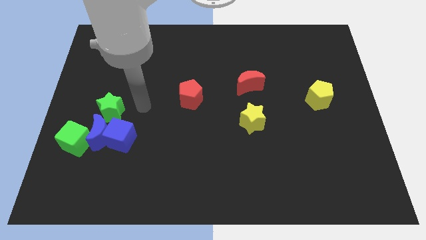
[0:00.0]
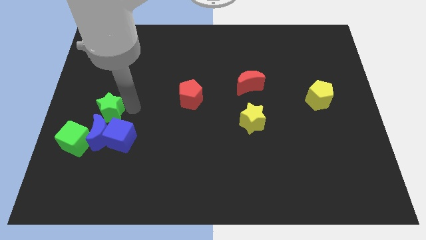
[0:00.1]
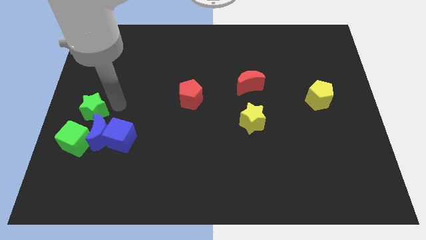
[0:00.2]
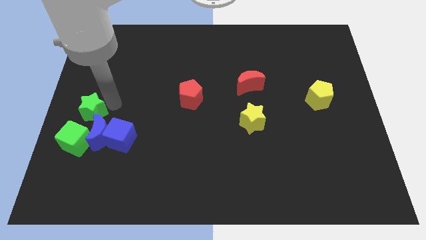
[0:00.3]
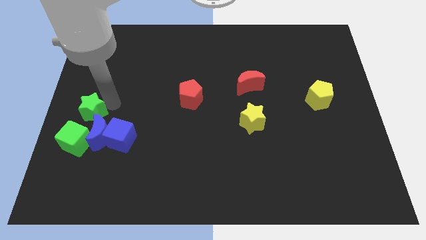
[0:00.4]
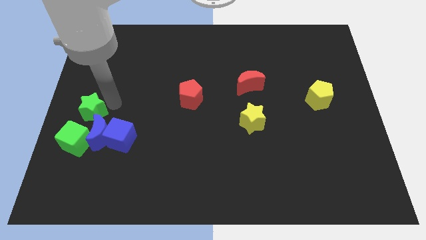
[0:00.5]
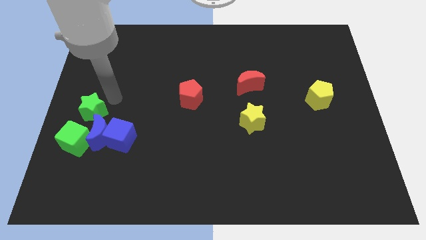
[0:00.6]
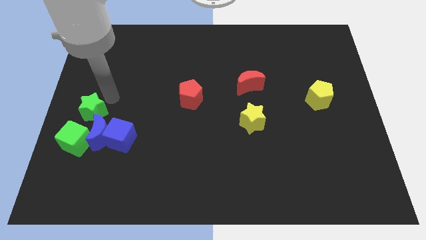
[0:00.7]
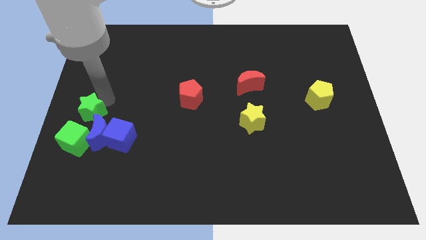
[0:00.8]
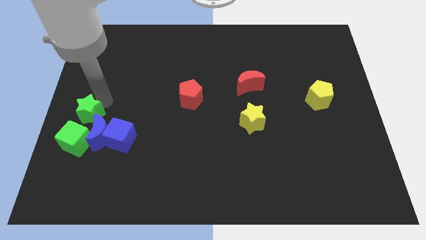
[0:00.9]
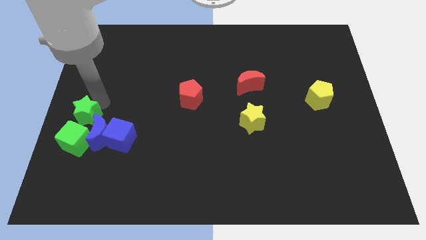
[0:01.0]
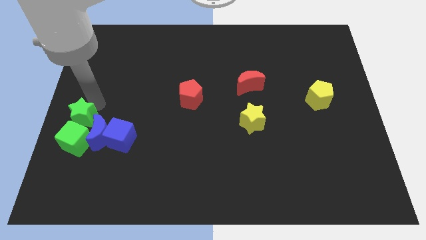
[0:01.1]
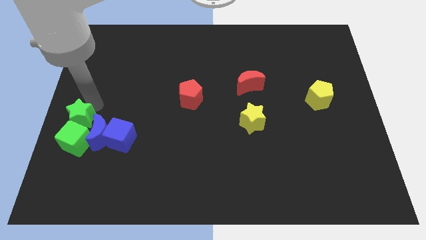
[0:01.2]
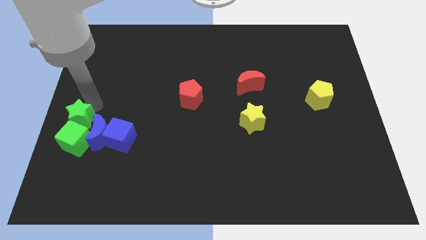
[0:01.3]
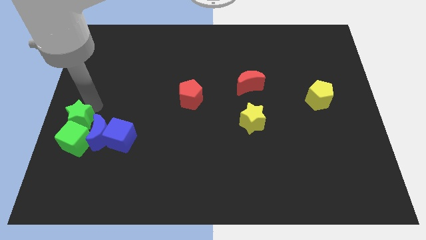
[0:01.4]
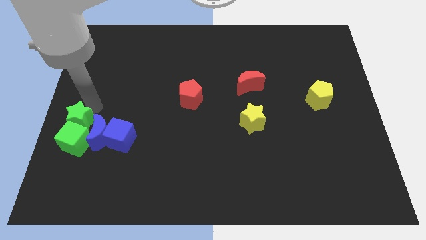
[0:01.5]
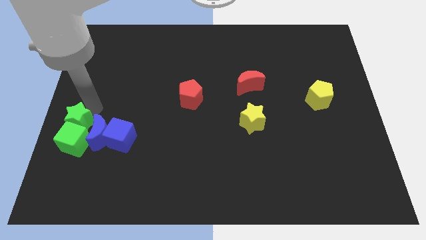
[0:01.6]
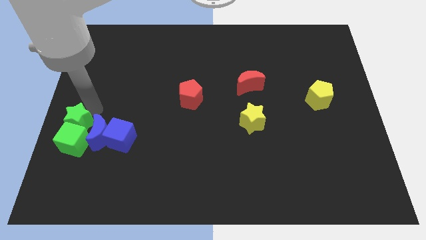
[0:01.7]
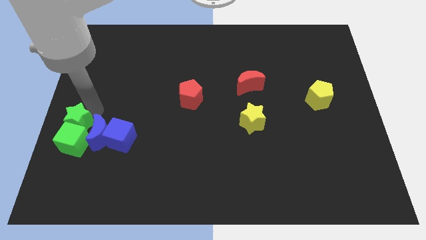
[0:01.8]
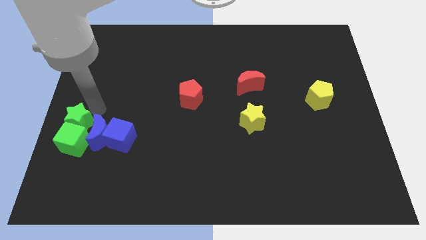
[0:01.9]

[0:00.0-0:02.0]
push the green star to the top of the green cube

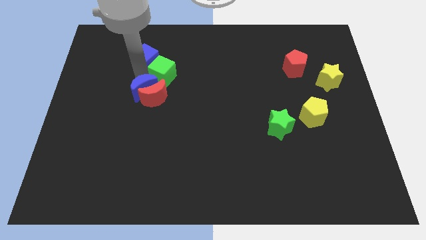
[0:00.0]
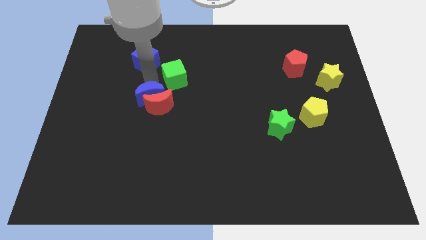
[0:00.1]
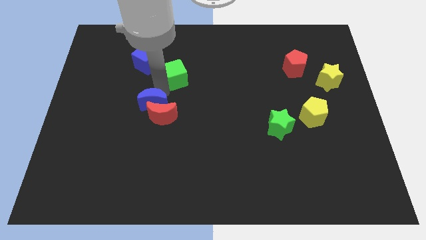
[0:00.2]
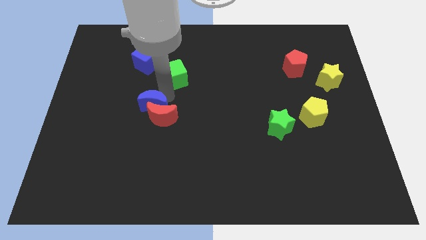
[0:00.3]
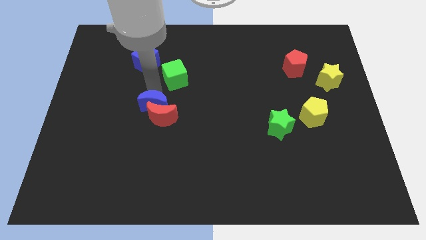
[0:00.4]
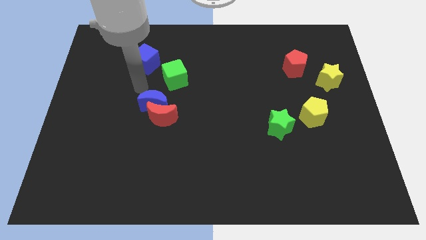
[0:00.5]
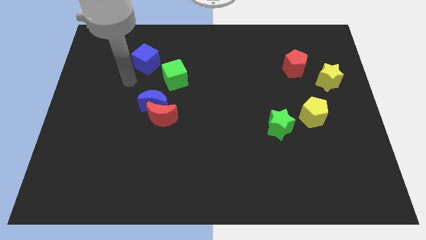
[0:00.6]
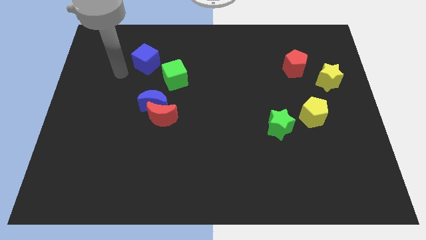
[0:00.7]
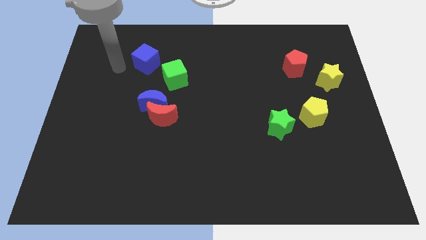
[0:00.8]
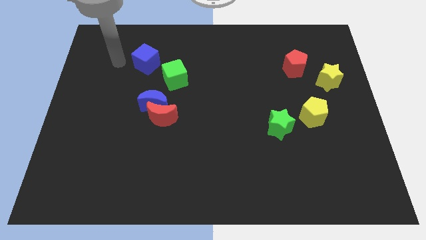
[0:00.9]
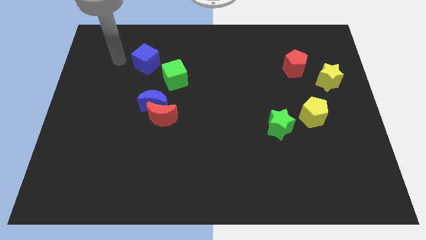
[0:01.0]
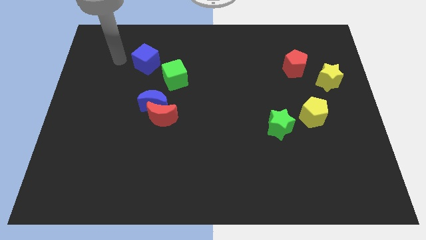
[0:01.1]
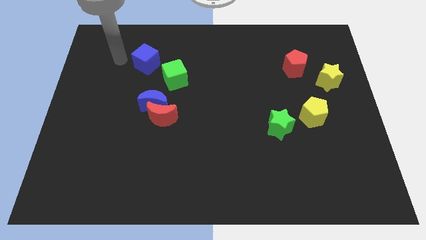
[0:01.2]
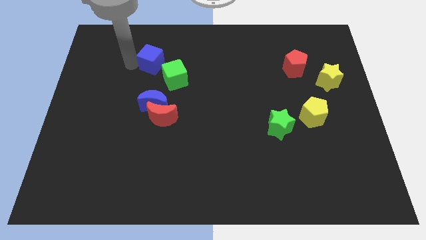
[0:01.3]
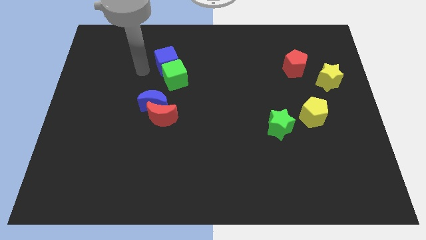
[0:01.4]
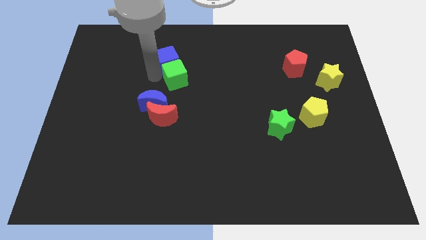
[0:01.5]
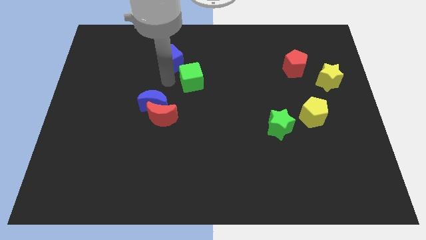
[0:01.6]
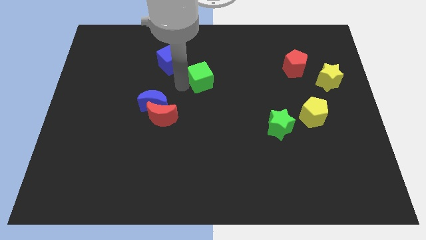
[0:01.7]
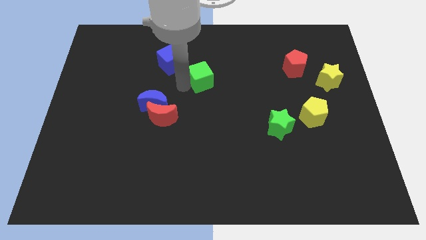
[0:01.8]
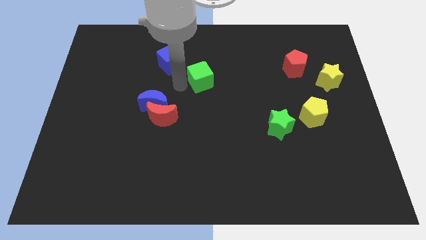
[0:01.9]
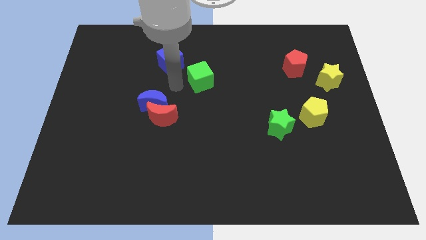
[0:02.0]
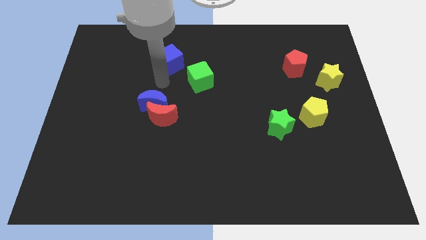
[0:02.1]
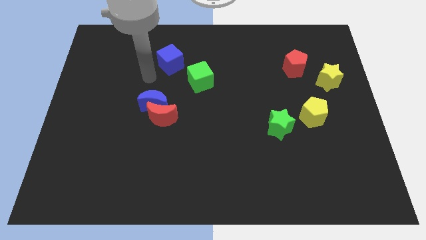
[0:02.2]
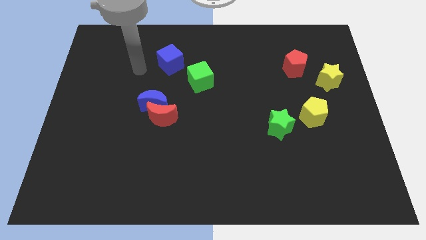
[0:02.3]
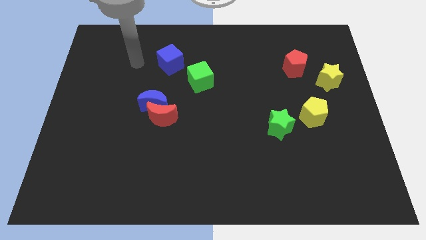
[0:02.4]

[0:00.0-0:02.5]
separate the green cube and blue cube

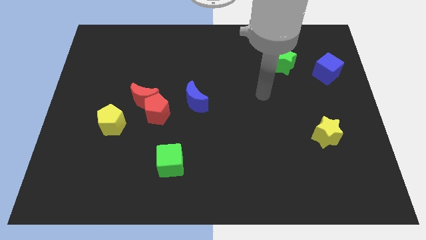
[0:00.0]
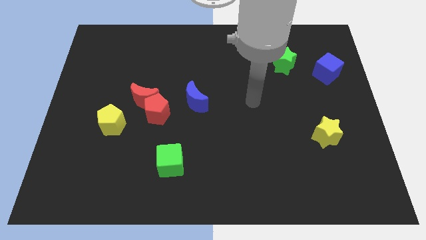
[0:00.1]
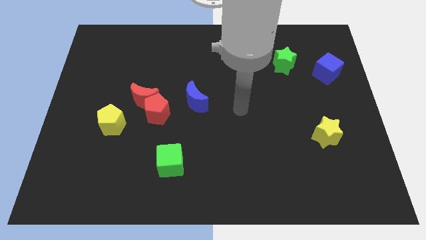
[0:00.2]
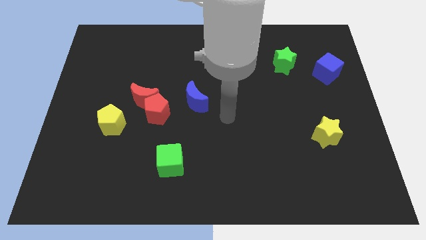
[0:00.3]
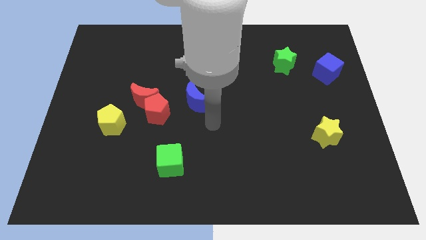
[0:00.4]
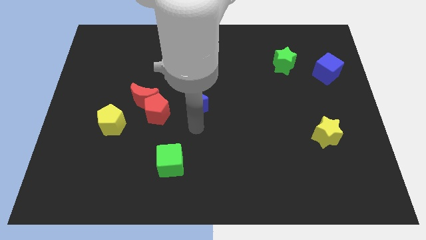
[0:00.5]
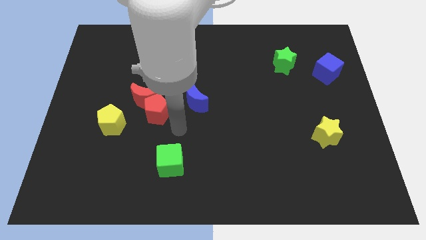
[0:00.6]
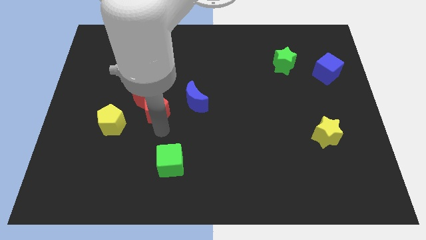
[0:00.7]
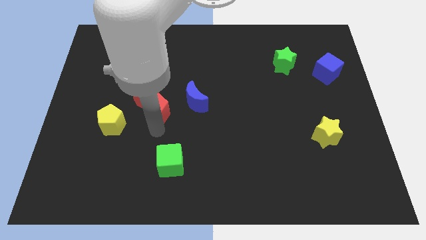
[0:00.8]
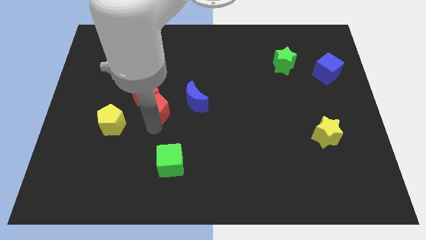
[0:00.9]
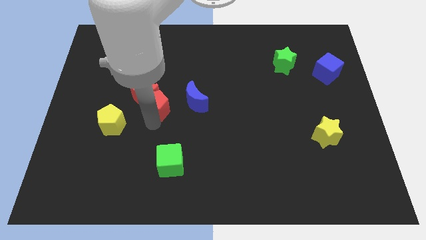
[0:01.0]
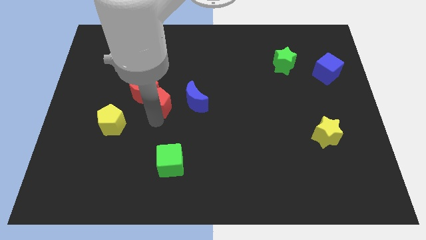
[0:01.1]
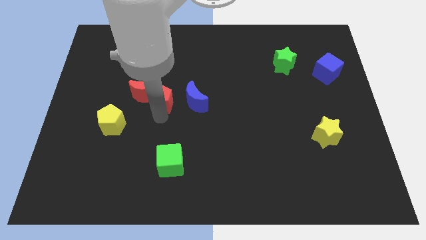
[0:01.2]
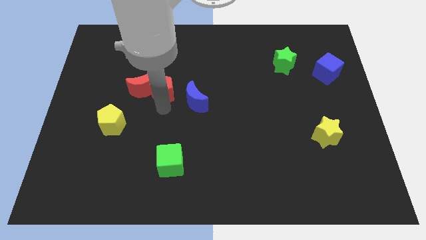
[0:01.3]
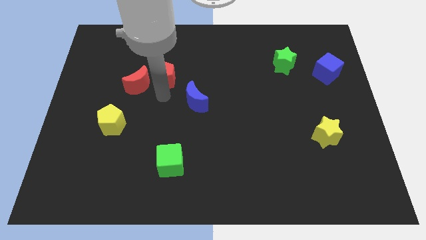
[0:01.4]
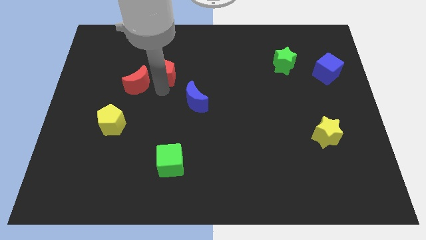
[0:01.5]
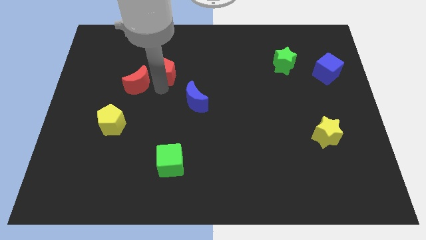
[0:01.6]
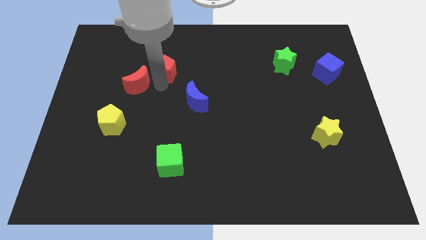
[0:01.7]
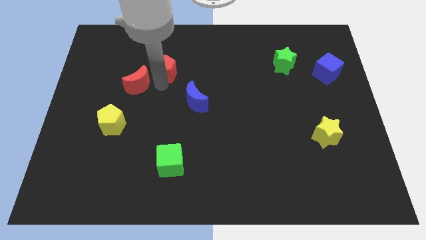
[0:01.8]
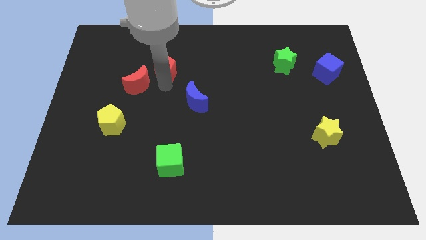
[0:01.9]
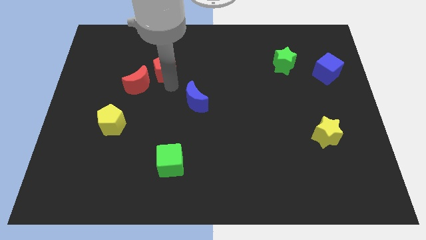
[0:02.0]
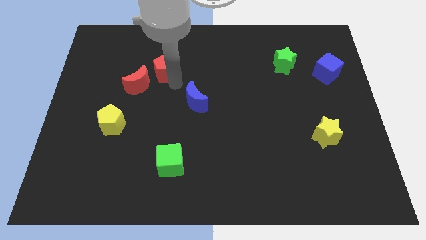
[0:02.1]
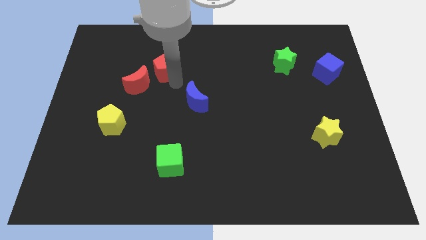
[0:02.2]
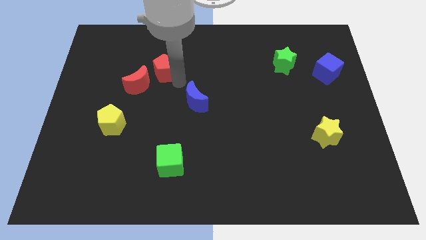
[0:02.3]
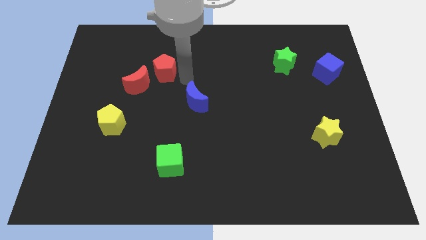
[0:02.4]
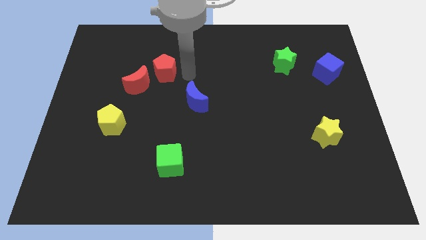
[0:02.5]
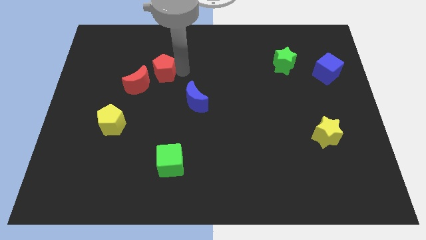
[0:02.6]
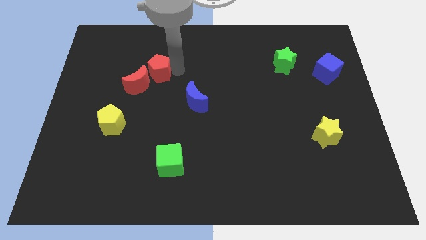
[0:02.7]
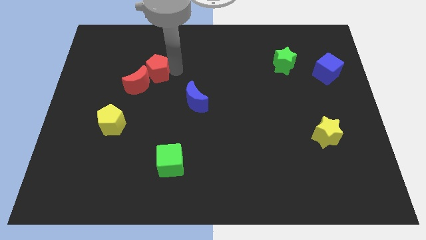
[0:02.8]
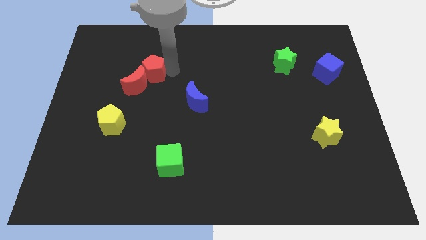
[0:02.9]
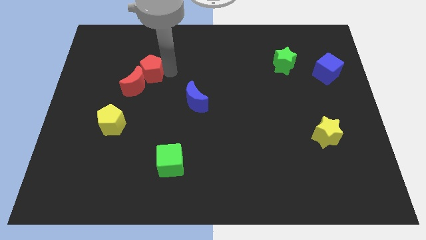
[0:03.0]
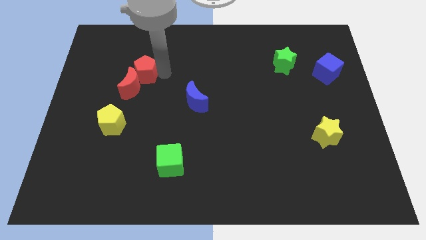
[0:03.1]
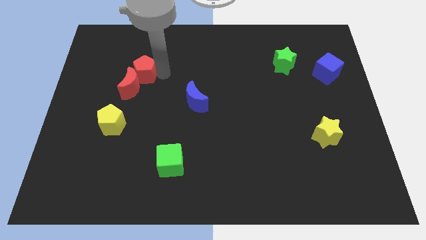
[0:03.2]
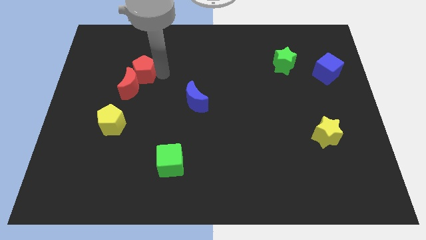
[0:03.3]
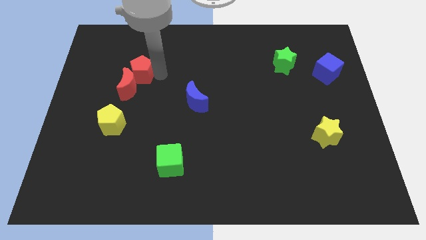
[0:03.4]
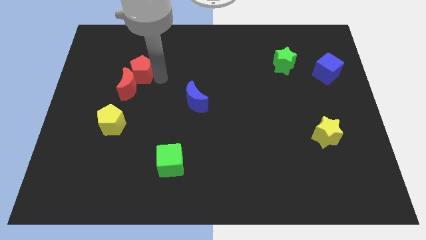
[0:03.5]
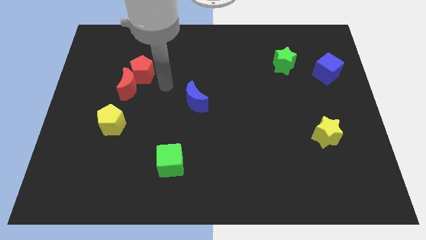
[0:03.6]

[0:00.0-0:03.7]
move the red pentagon to the top right of the red moon

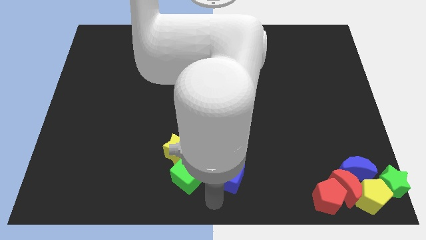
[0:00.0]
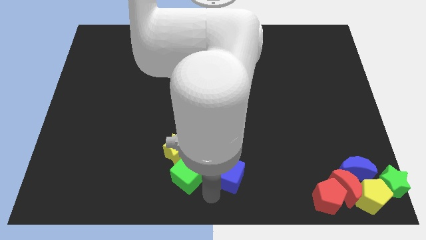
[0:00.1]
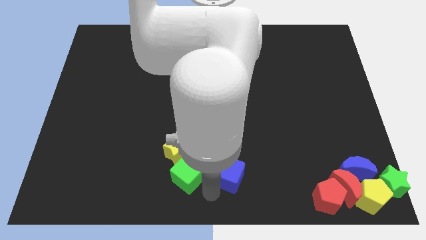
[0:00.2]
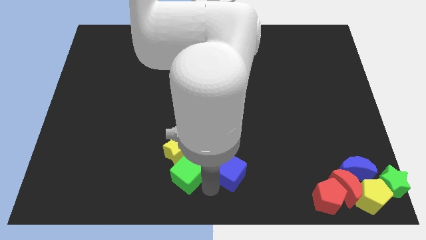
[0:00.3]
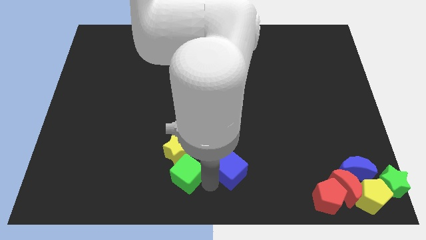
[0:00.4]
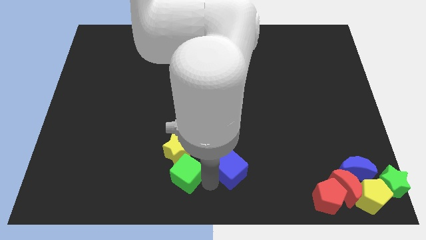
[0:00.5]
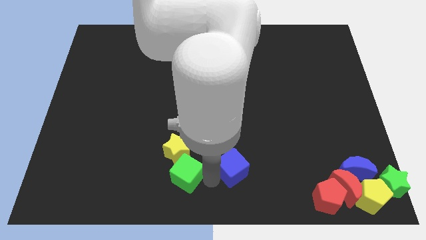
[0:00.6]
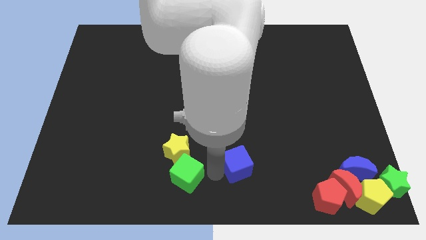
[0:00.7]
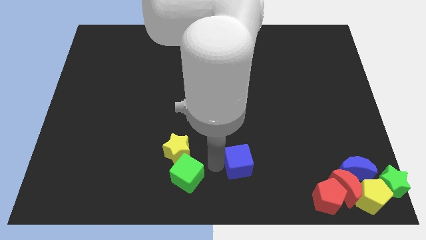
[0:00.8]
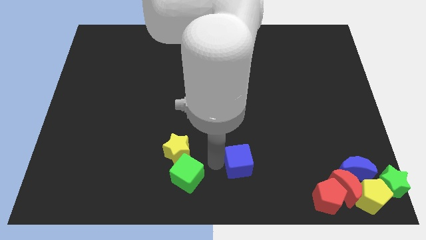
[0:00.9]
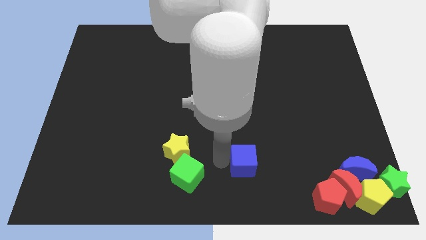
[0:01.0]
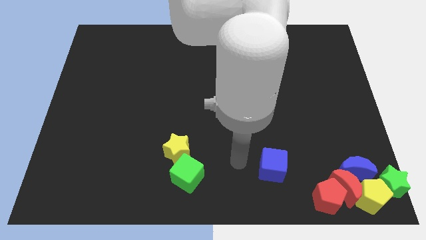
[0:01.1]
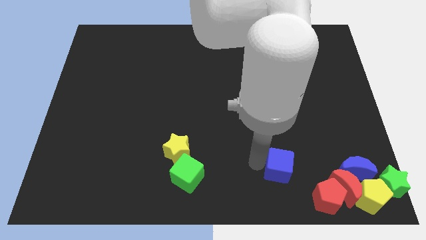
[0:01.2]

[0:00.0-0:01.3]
take the blue cube towards the group of blocks
